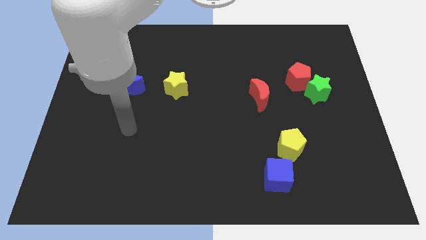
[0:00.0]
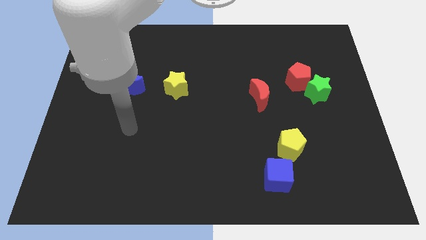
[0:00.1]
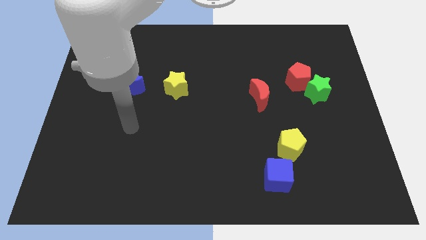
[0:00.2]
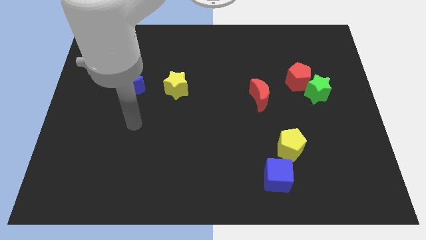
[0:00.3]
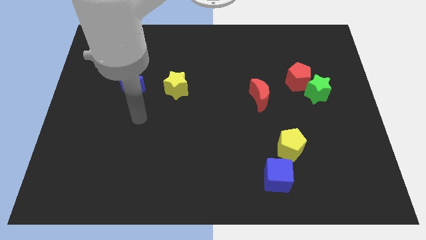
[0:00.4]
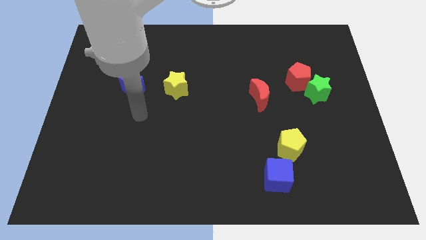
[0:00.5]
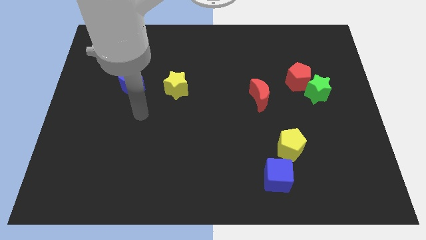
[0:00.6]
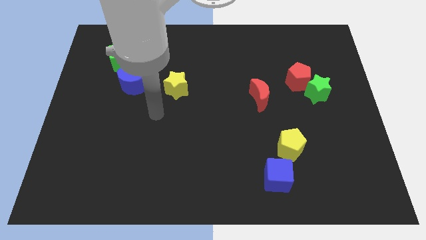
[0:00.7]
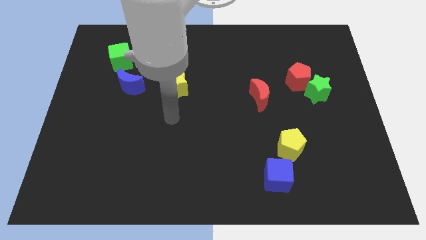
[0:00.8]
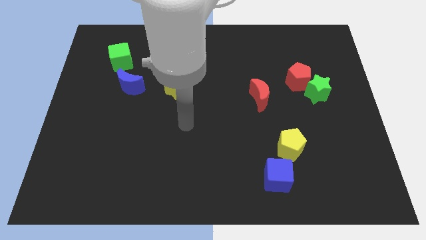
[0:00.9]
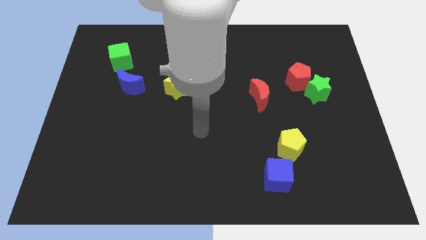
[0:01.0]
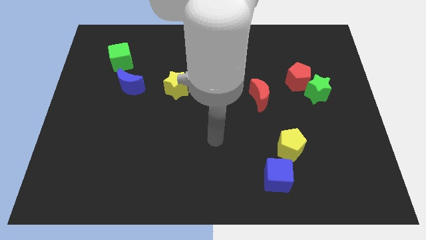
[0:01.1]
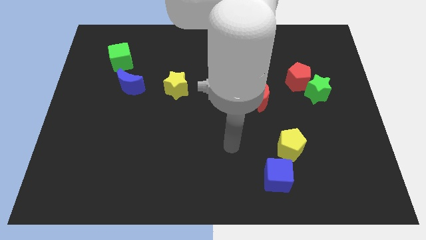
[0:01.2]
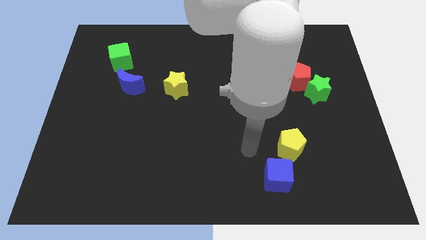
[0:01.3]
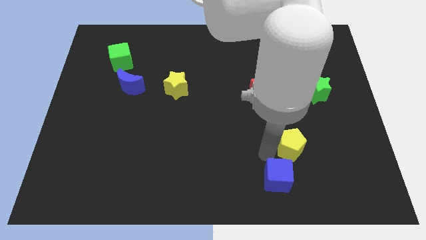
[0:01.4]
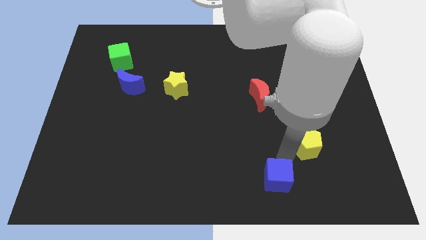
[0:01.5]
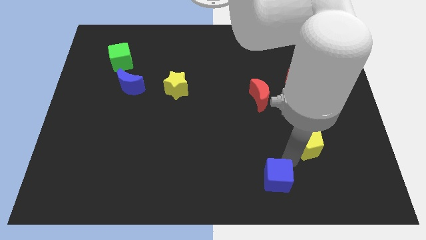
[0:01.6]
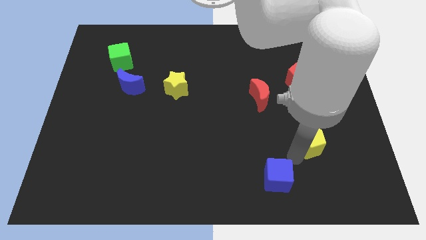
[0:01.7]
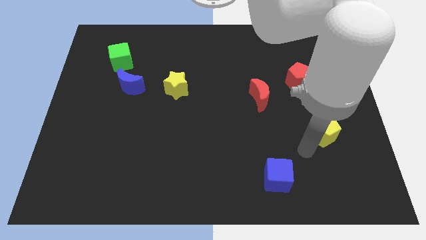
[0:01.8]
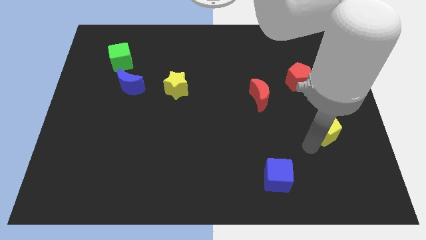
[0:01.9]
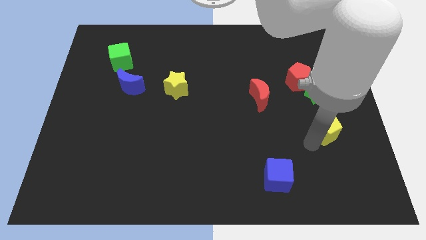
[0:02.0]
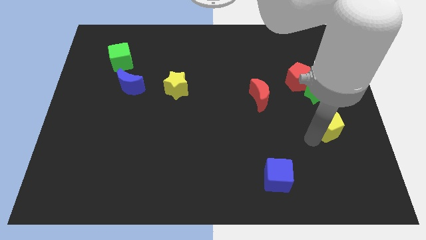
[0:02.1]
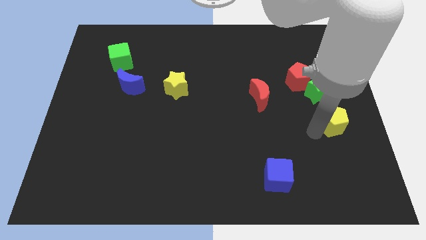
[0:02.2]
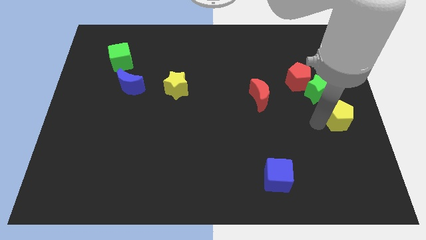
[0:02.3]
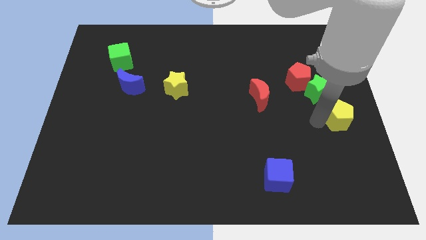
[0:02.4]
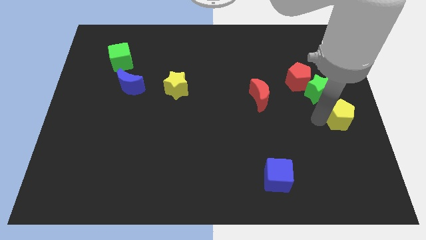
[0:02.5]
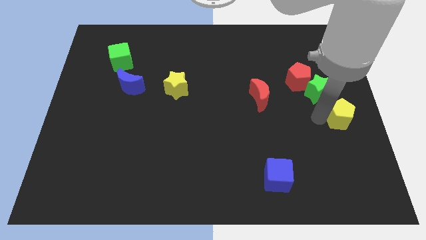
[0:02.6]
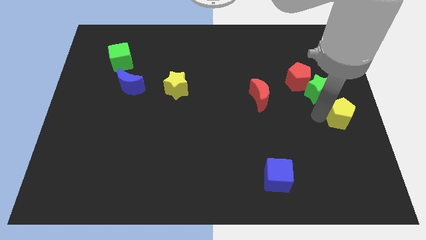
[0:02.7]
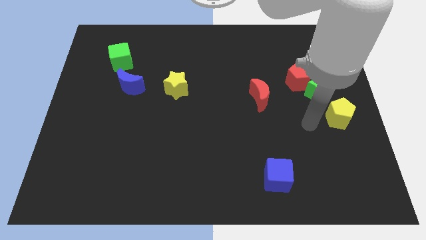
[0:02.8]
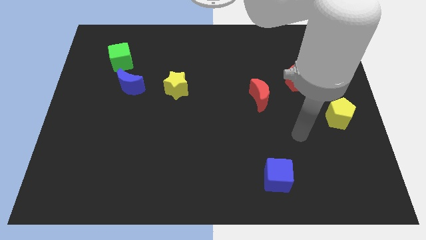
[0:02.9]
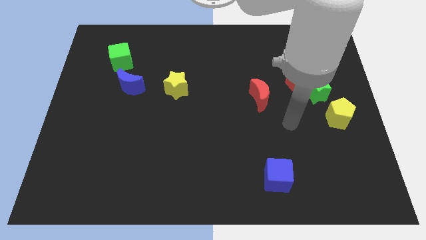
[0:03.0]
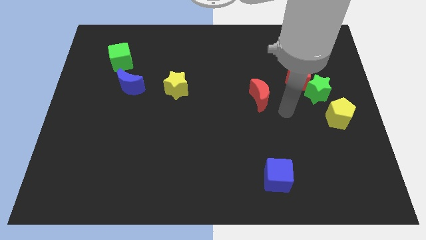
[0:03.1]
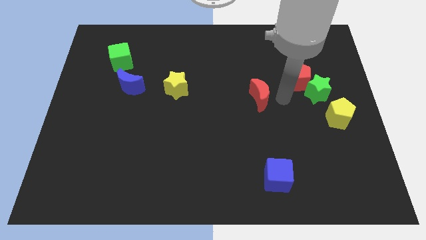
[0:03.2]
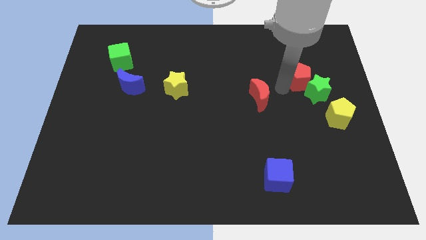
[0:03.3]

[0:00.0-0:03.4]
push the yellow pentagon to the right side of the board

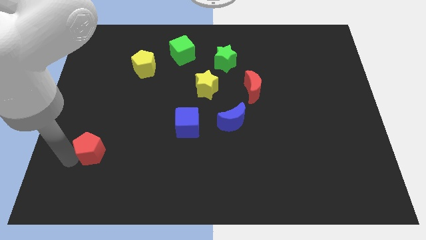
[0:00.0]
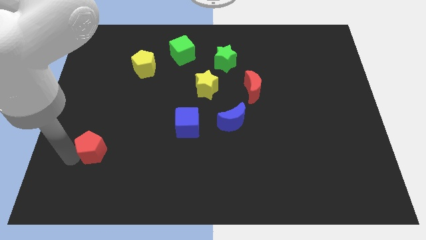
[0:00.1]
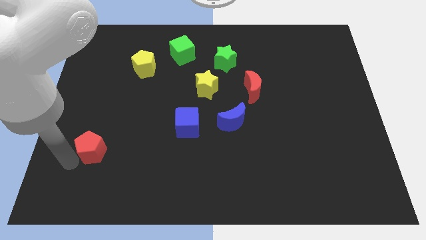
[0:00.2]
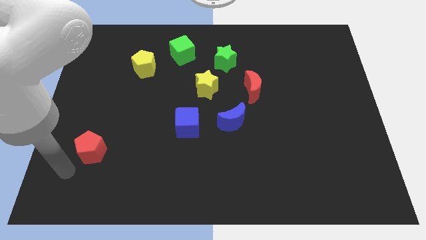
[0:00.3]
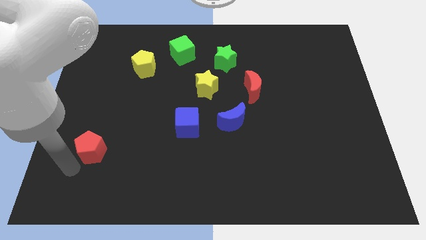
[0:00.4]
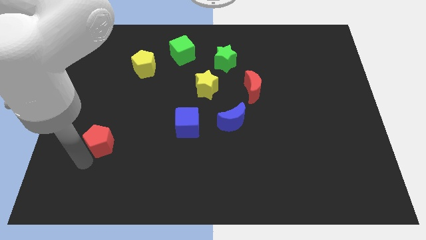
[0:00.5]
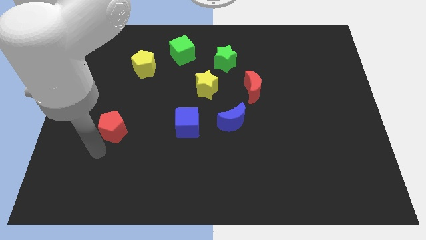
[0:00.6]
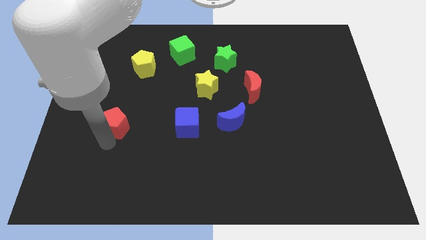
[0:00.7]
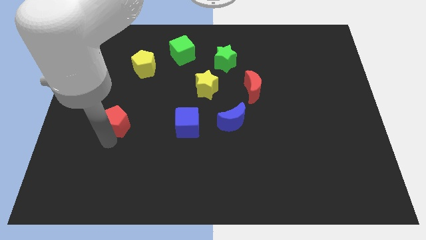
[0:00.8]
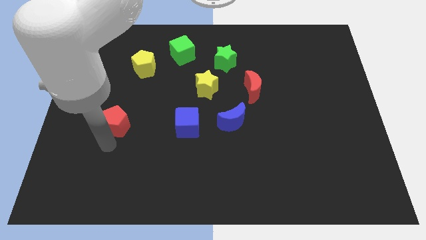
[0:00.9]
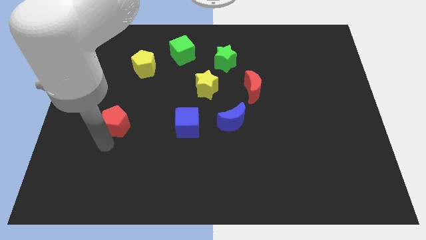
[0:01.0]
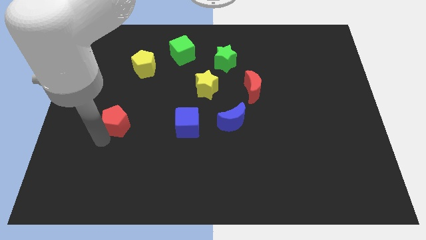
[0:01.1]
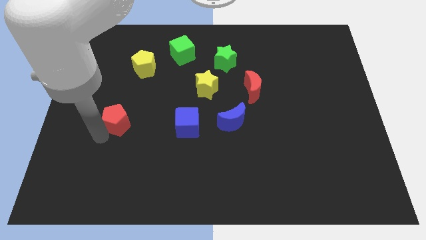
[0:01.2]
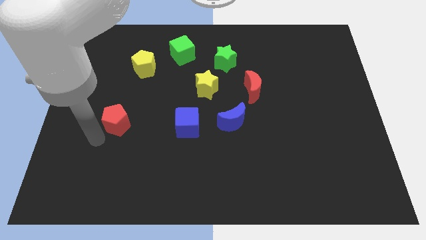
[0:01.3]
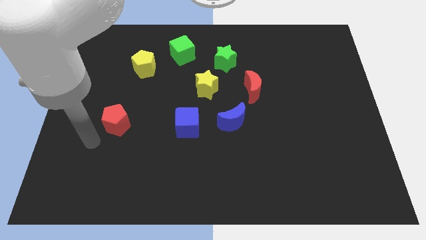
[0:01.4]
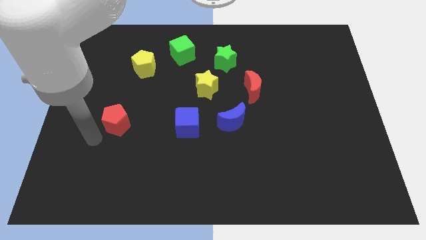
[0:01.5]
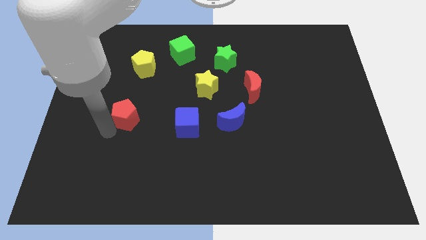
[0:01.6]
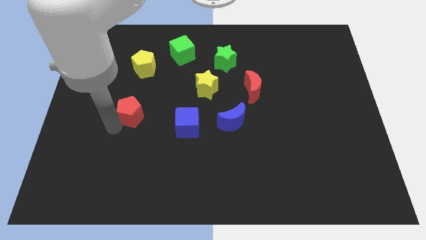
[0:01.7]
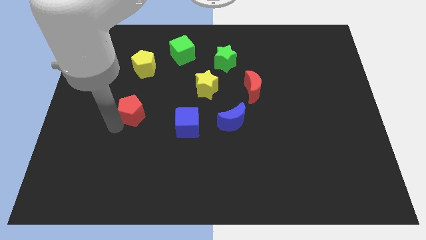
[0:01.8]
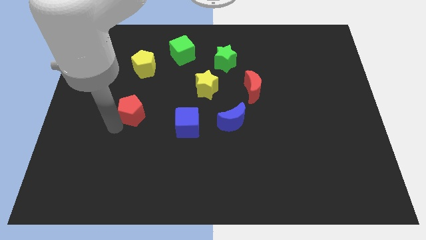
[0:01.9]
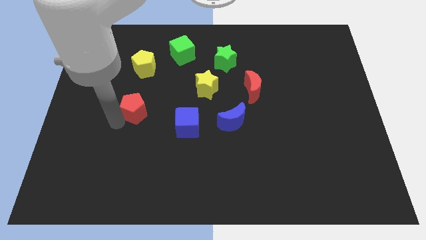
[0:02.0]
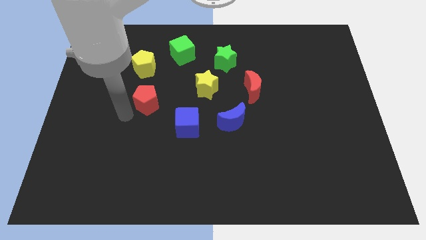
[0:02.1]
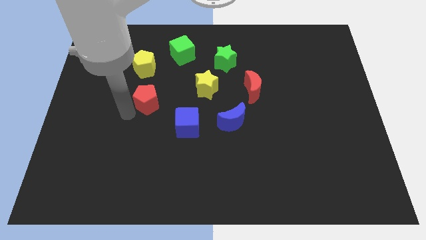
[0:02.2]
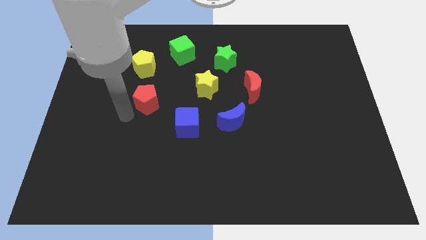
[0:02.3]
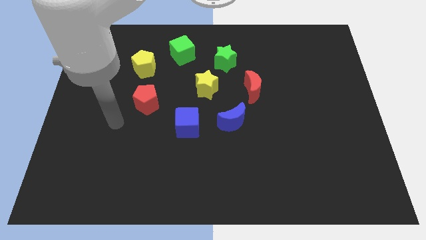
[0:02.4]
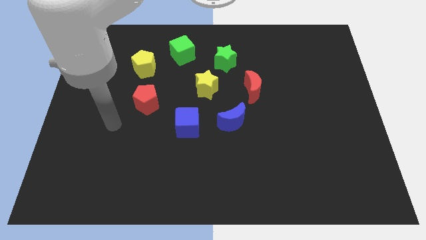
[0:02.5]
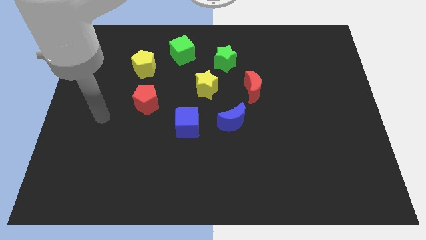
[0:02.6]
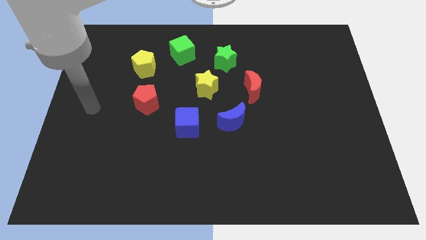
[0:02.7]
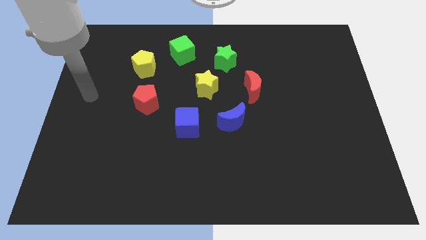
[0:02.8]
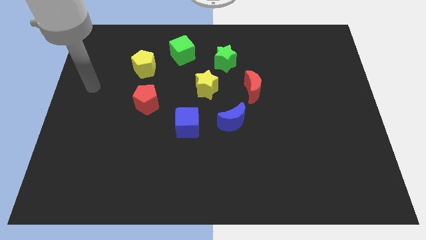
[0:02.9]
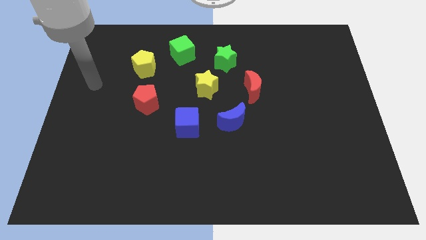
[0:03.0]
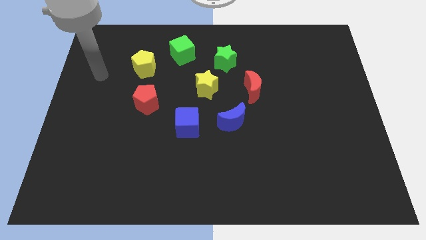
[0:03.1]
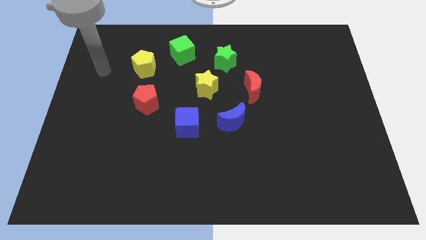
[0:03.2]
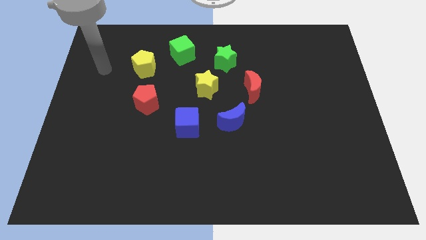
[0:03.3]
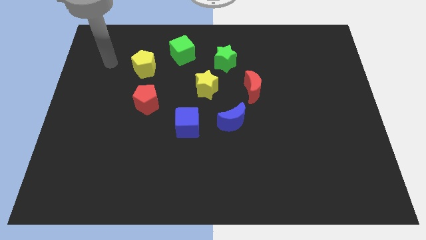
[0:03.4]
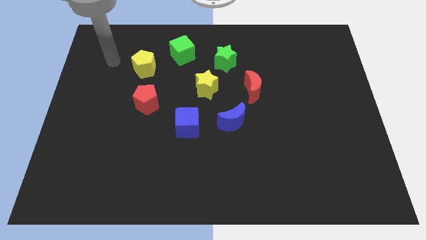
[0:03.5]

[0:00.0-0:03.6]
place the red pentagon diagonally to the blue cube

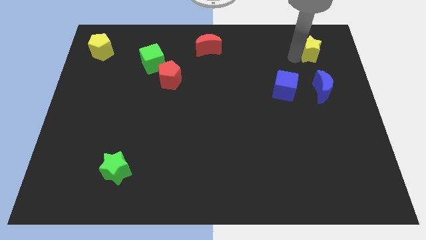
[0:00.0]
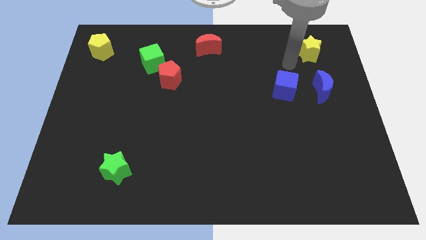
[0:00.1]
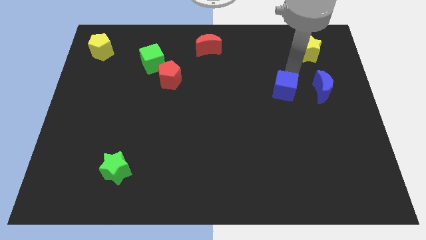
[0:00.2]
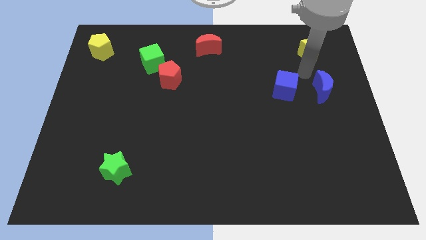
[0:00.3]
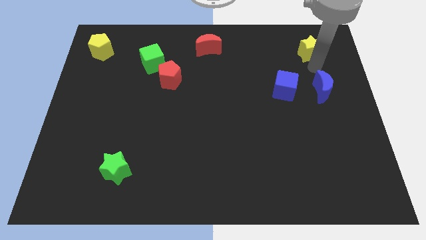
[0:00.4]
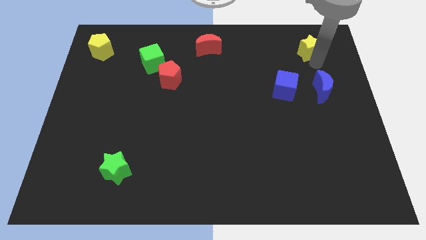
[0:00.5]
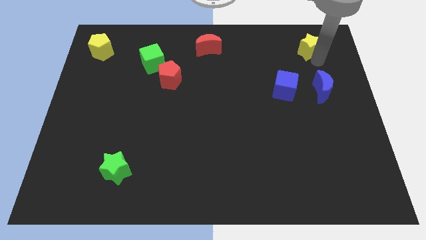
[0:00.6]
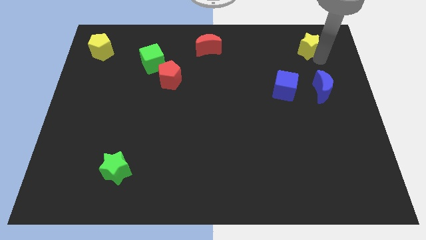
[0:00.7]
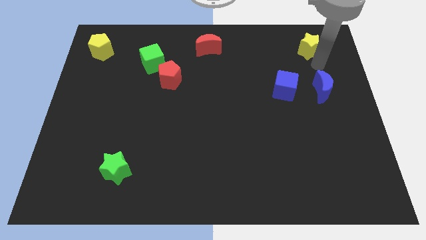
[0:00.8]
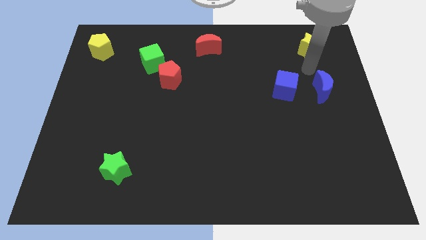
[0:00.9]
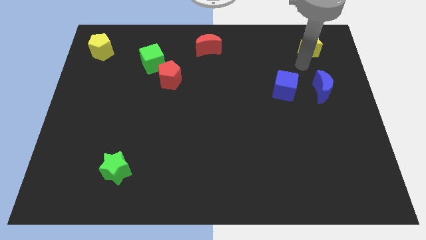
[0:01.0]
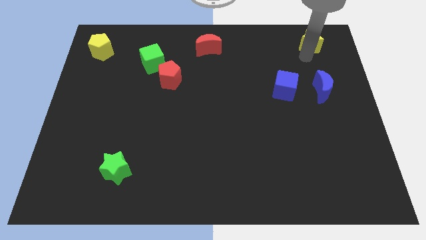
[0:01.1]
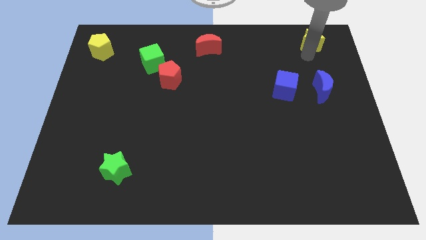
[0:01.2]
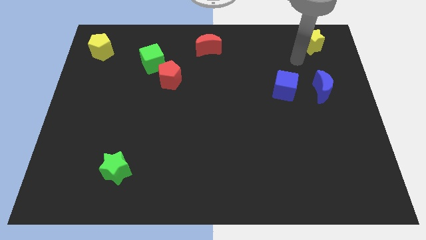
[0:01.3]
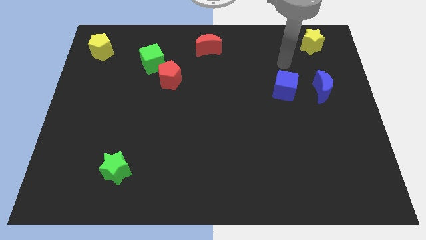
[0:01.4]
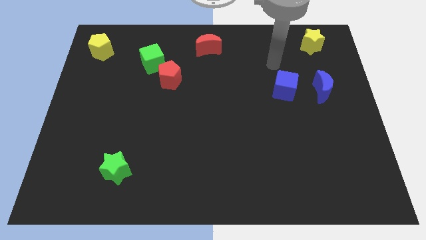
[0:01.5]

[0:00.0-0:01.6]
move the yellow star to the top right corner of the board

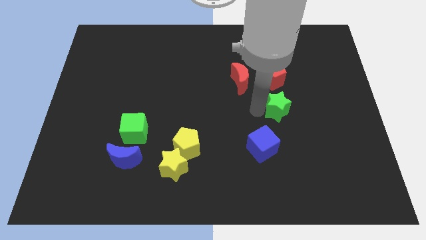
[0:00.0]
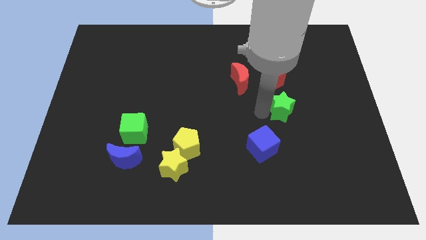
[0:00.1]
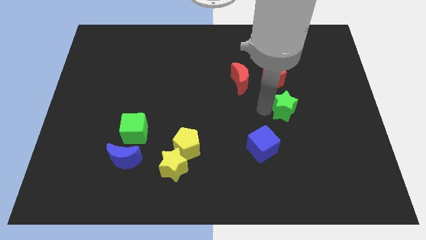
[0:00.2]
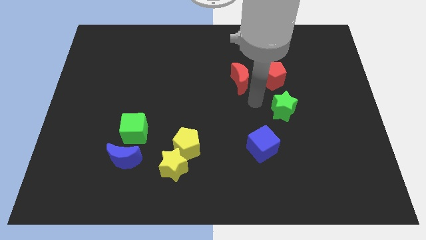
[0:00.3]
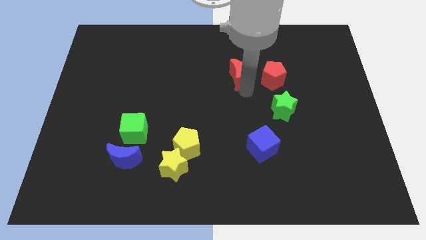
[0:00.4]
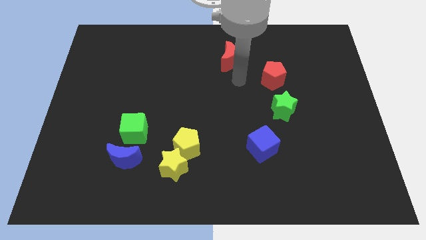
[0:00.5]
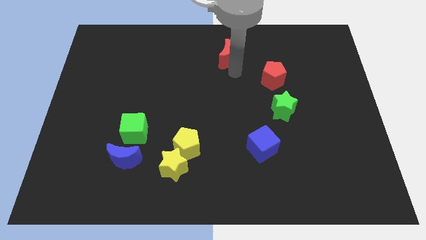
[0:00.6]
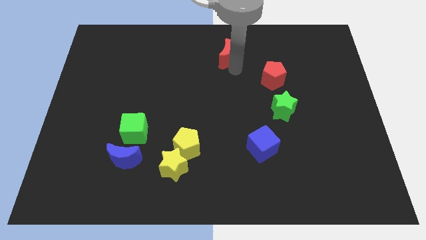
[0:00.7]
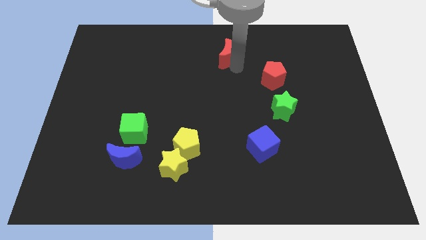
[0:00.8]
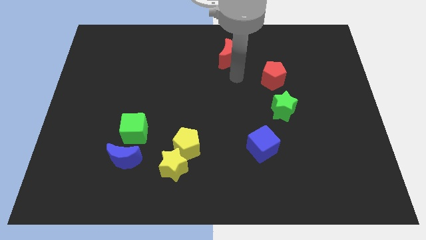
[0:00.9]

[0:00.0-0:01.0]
move the red crescent to top of the board
